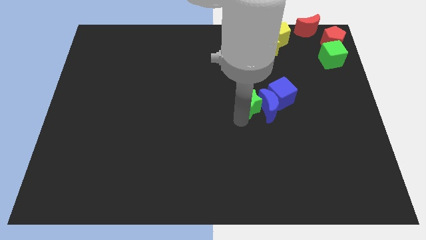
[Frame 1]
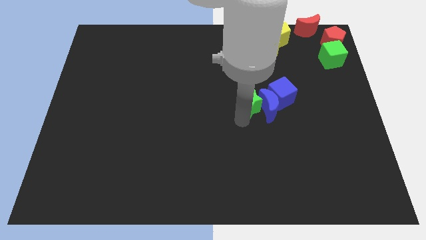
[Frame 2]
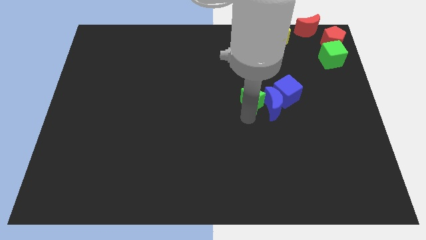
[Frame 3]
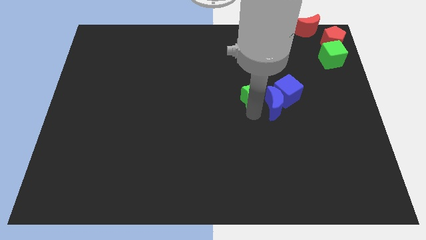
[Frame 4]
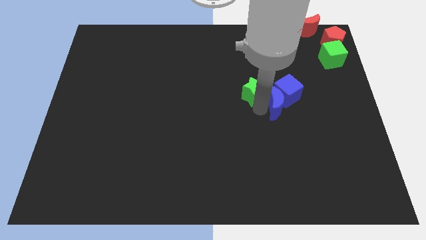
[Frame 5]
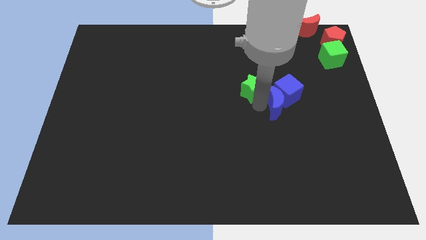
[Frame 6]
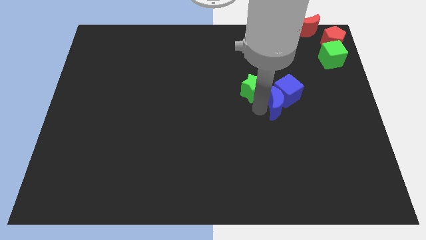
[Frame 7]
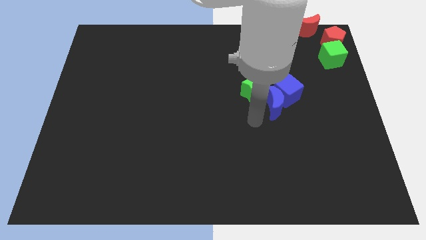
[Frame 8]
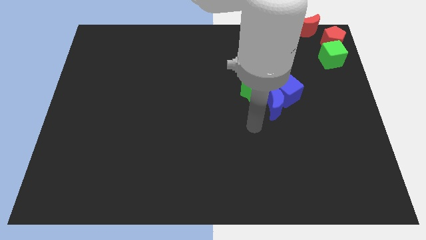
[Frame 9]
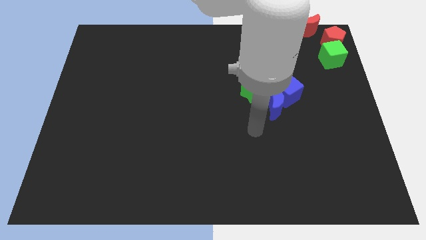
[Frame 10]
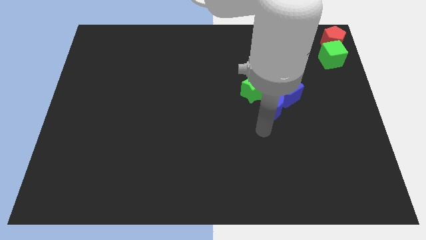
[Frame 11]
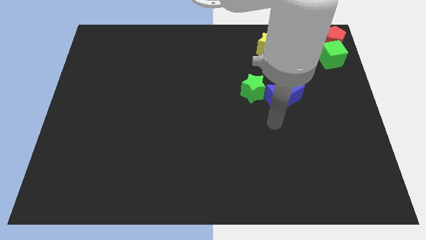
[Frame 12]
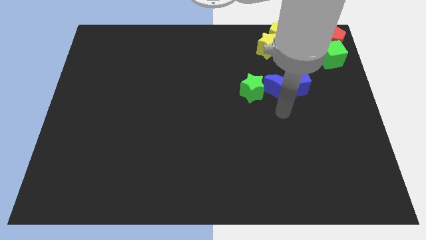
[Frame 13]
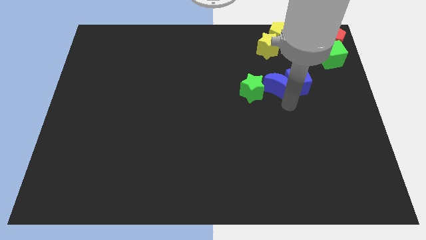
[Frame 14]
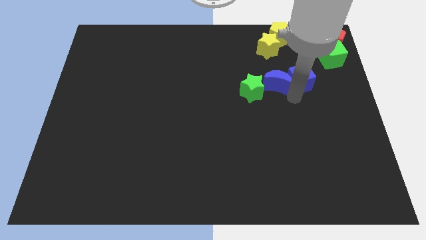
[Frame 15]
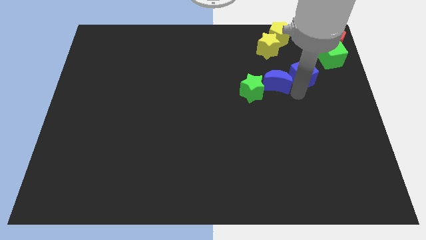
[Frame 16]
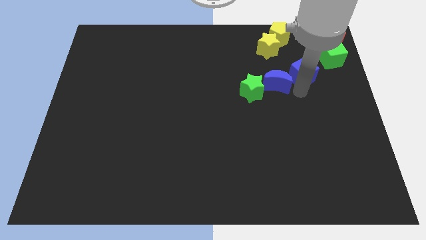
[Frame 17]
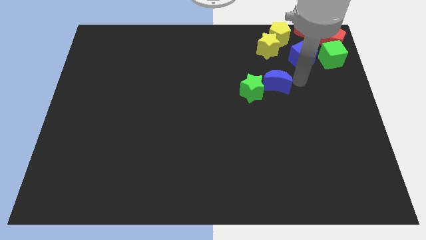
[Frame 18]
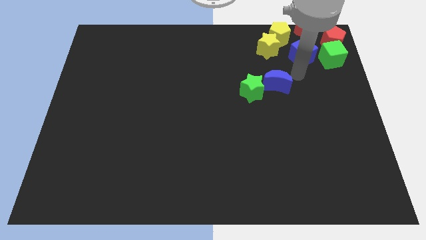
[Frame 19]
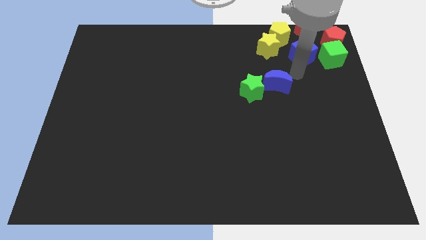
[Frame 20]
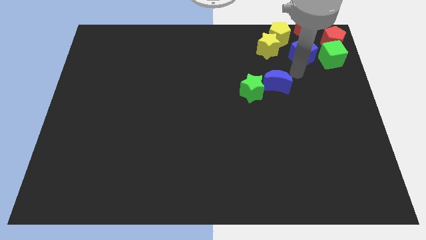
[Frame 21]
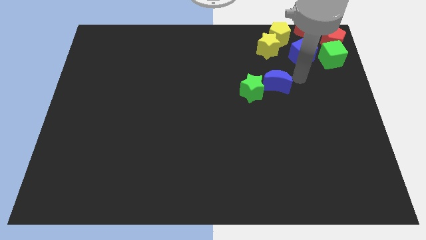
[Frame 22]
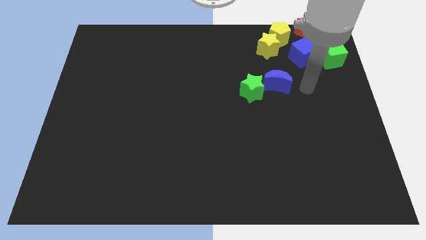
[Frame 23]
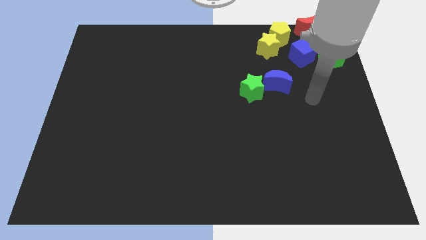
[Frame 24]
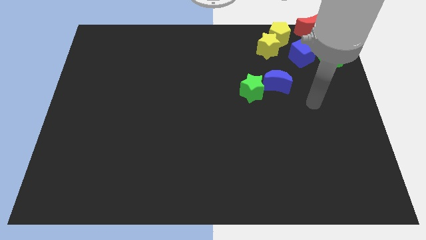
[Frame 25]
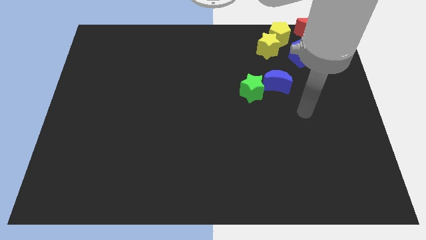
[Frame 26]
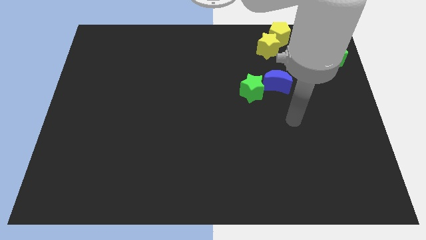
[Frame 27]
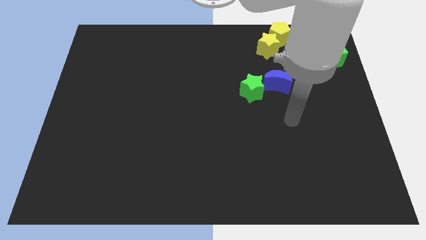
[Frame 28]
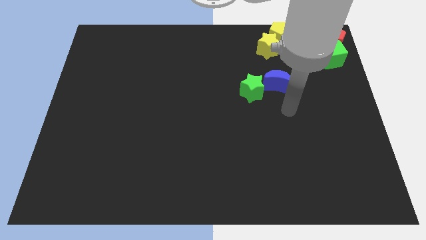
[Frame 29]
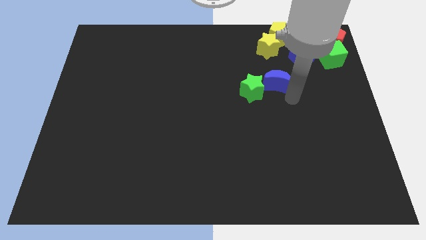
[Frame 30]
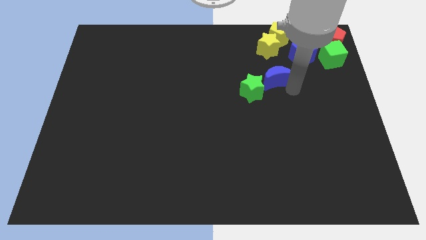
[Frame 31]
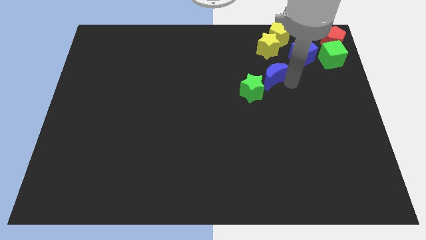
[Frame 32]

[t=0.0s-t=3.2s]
place the blue blocks and green star in a diagonal line at the top right

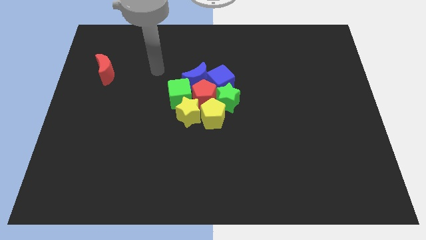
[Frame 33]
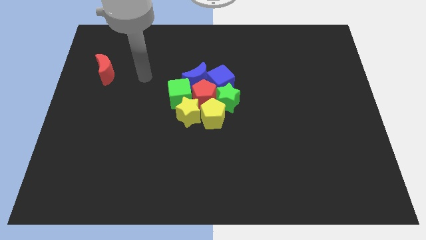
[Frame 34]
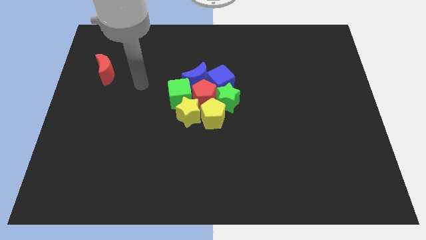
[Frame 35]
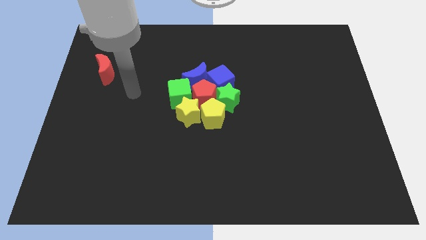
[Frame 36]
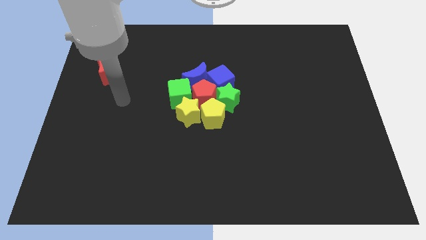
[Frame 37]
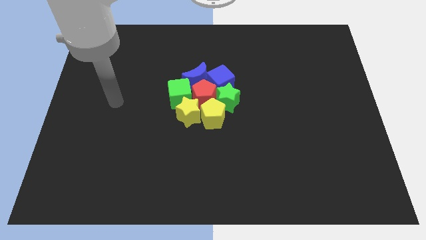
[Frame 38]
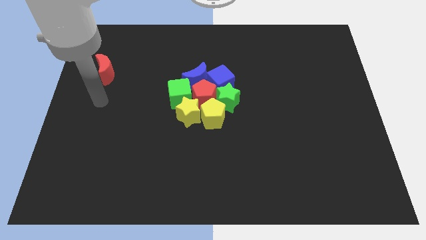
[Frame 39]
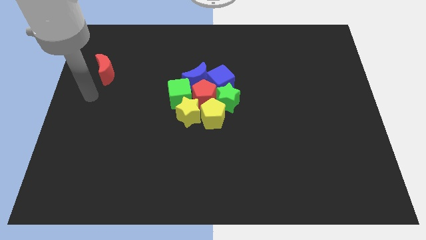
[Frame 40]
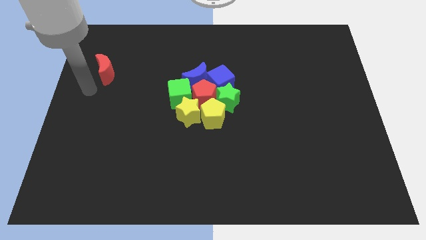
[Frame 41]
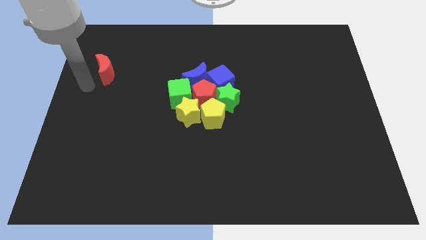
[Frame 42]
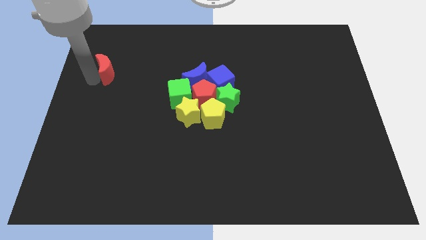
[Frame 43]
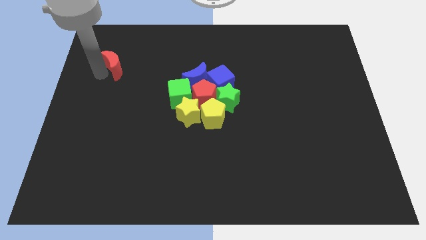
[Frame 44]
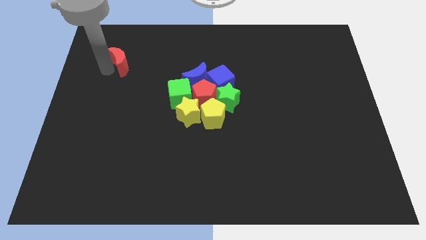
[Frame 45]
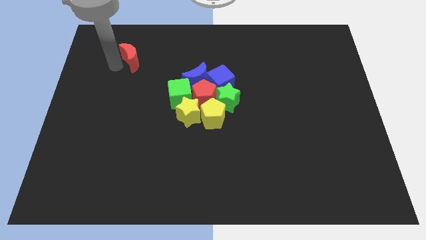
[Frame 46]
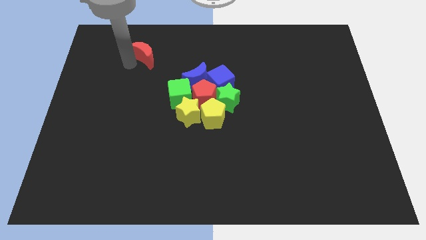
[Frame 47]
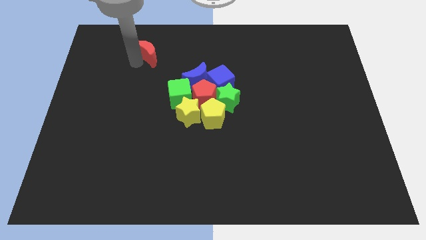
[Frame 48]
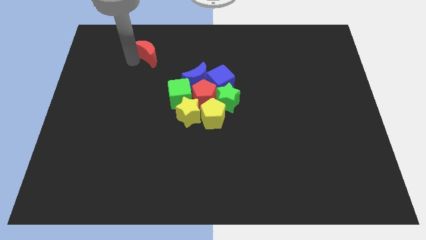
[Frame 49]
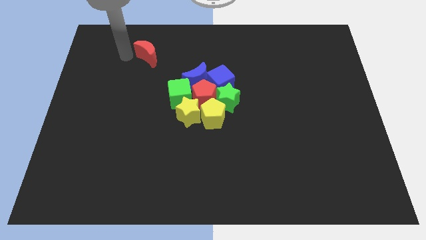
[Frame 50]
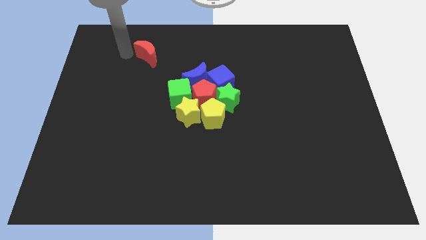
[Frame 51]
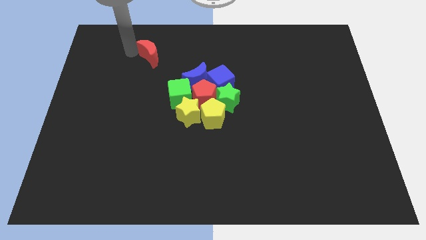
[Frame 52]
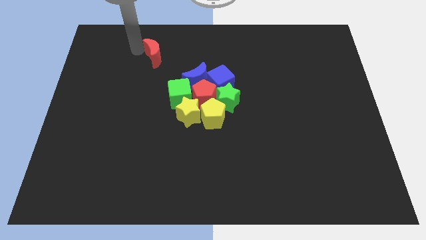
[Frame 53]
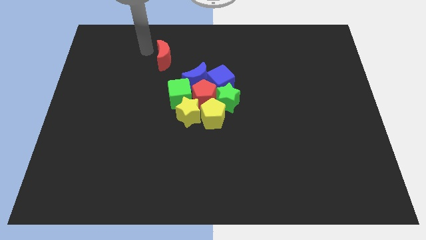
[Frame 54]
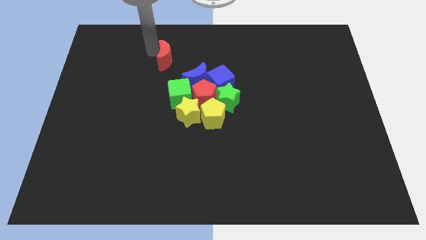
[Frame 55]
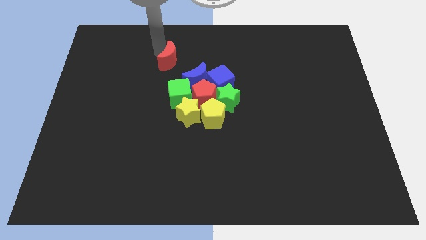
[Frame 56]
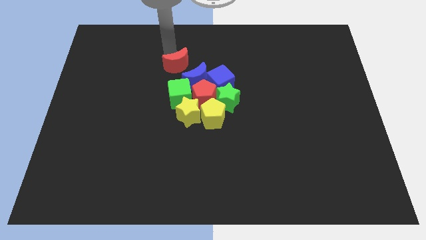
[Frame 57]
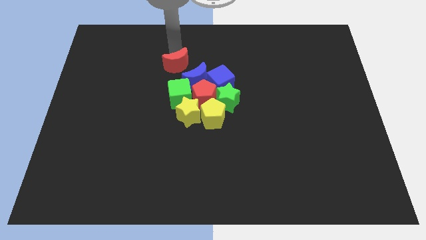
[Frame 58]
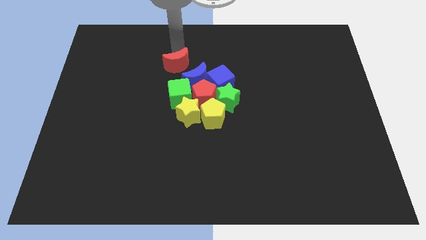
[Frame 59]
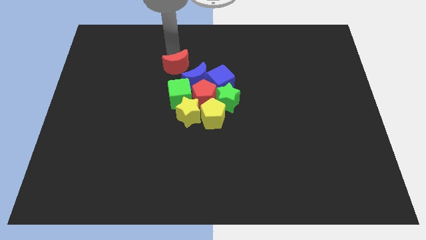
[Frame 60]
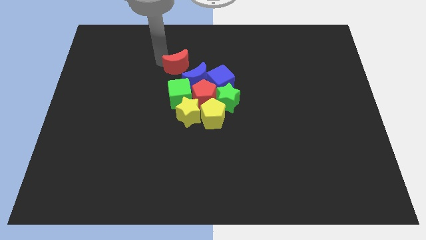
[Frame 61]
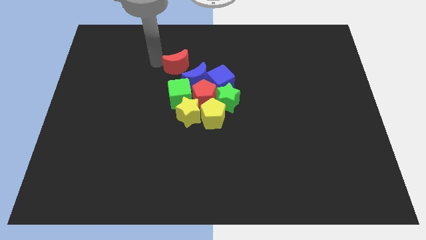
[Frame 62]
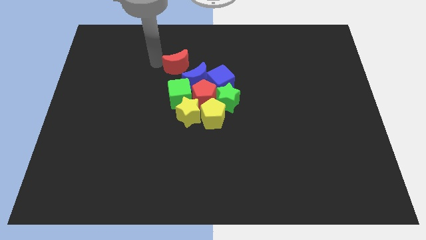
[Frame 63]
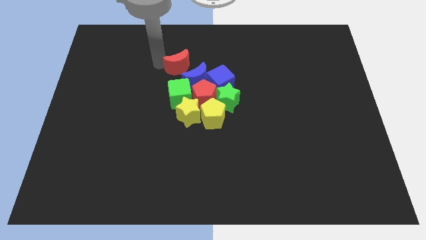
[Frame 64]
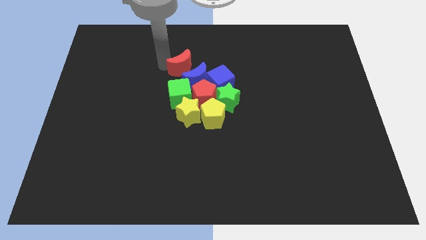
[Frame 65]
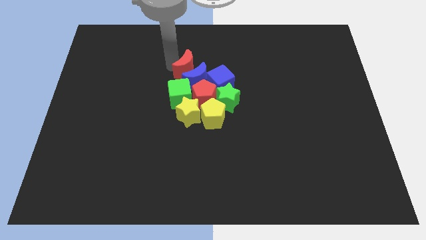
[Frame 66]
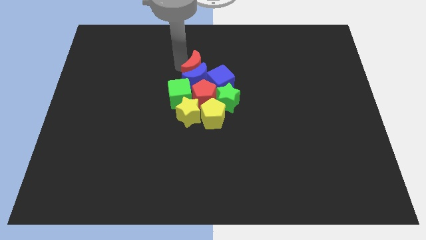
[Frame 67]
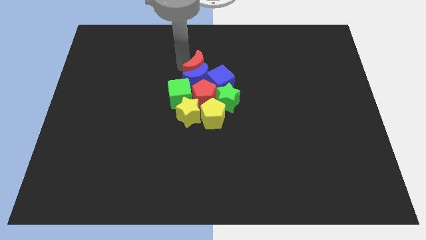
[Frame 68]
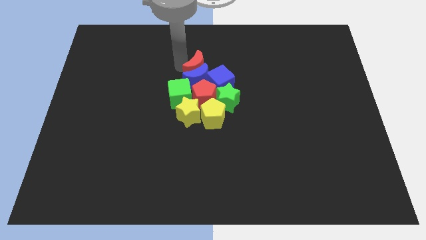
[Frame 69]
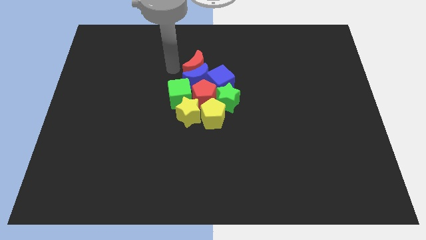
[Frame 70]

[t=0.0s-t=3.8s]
move the red moon into the blue moon

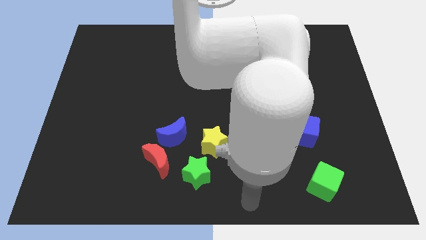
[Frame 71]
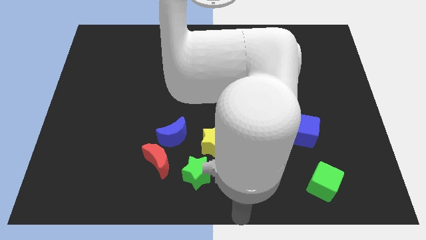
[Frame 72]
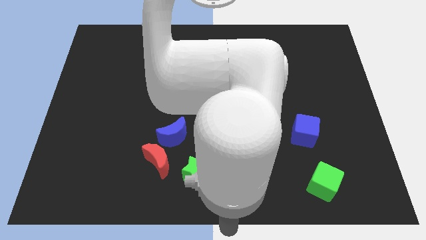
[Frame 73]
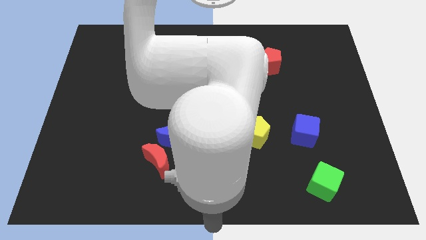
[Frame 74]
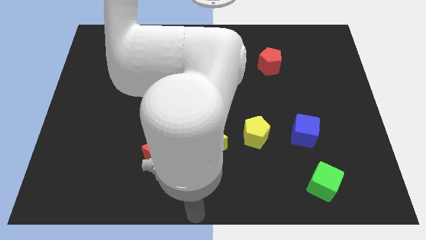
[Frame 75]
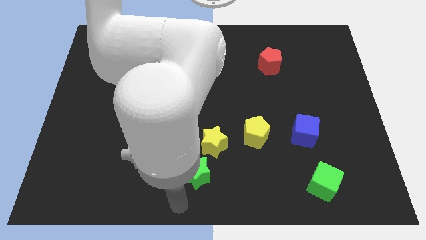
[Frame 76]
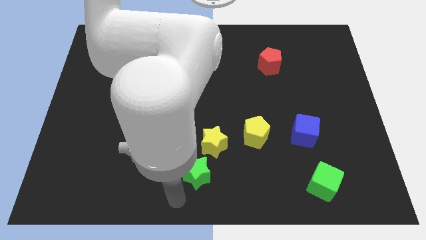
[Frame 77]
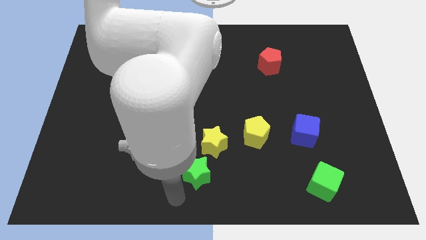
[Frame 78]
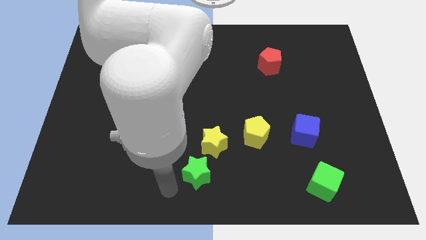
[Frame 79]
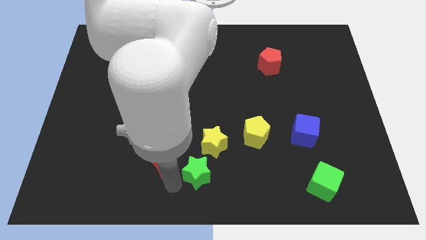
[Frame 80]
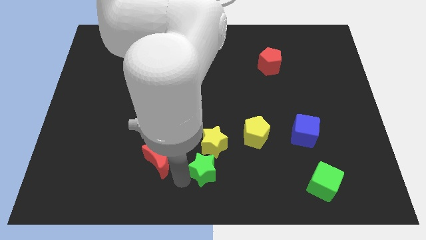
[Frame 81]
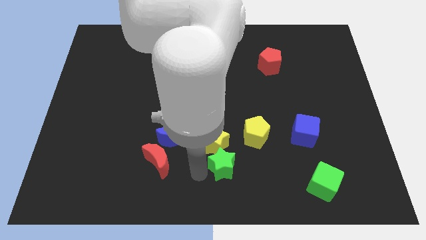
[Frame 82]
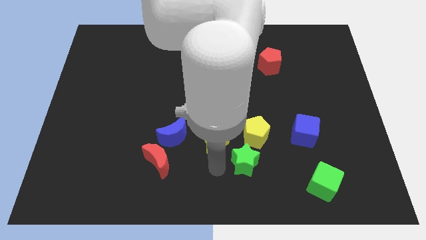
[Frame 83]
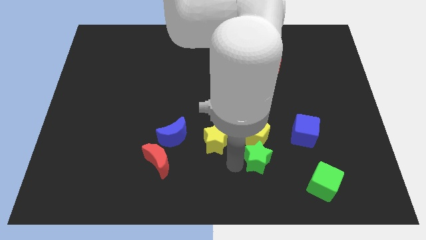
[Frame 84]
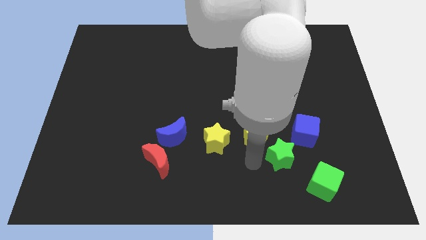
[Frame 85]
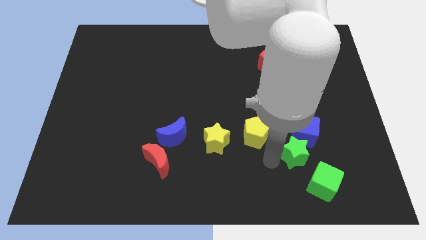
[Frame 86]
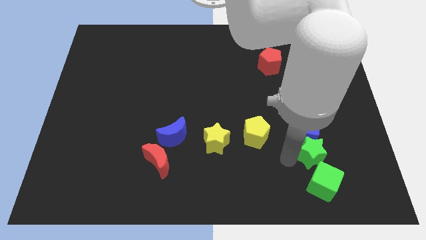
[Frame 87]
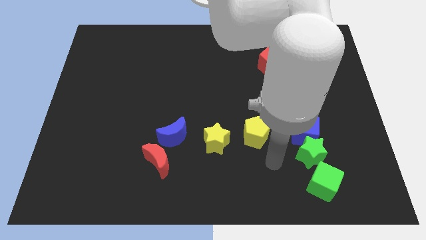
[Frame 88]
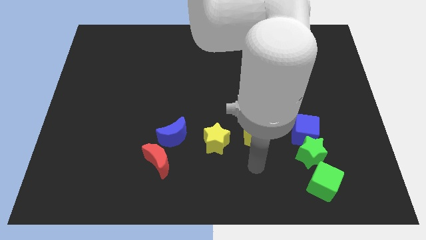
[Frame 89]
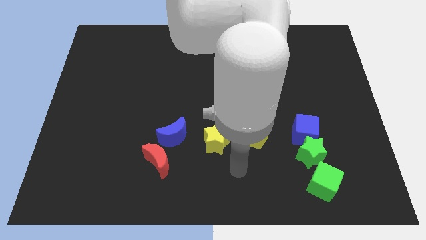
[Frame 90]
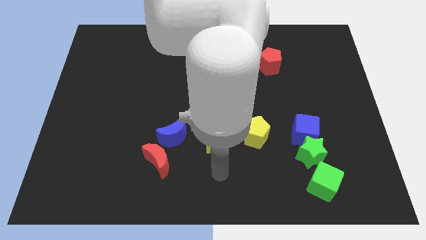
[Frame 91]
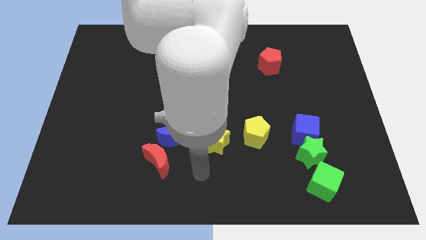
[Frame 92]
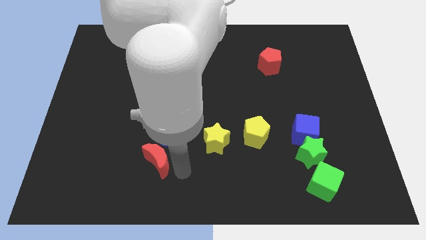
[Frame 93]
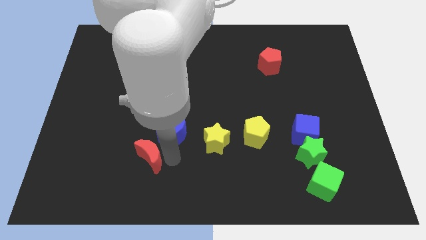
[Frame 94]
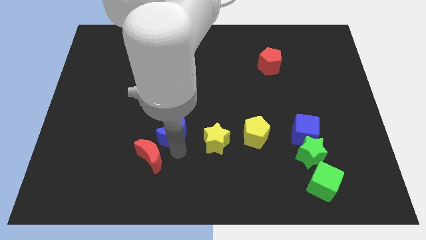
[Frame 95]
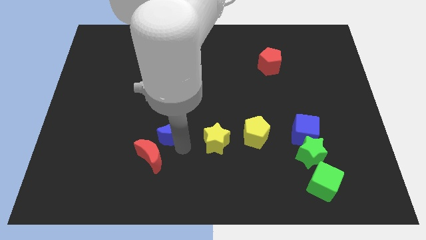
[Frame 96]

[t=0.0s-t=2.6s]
put the green star at the bottom of the blue cube
